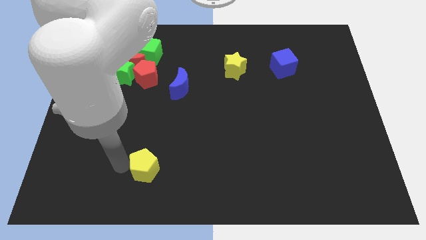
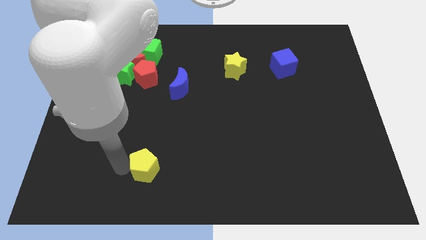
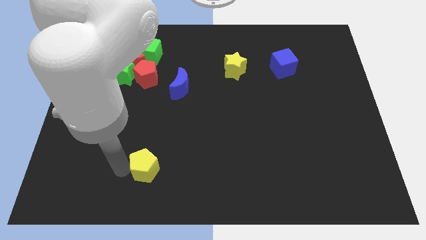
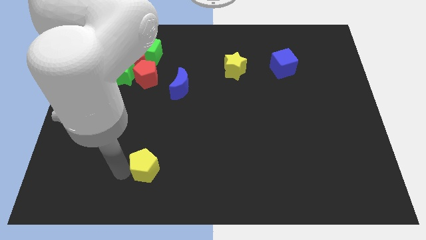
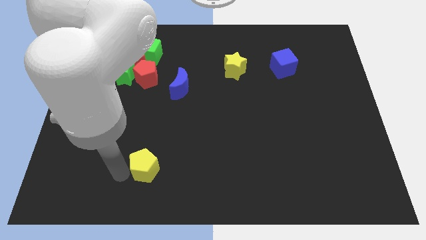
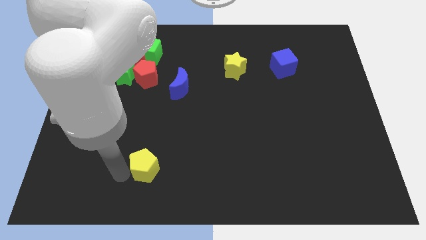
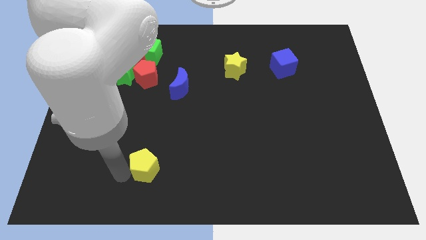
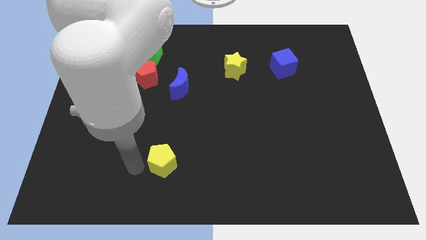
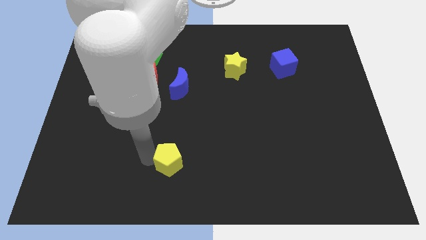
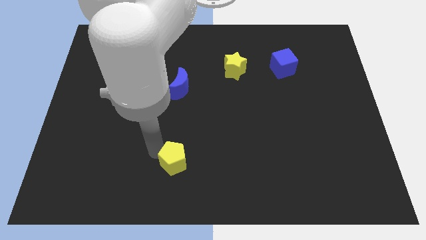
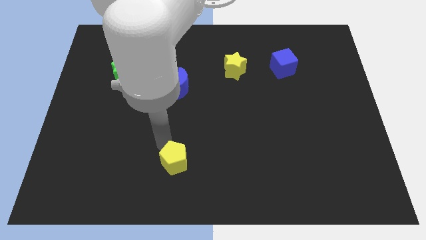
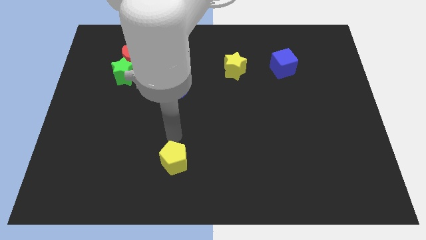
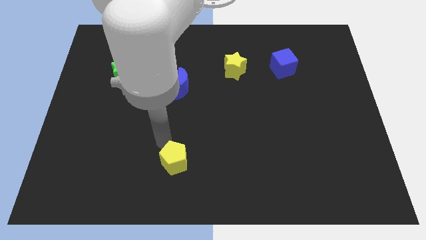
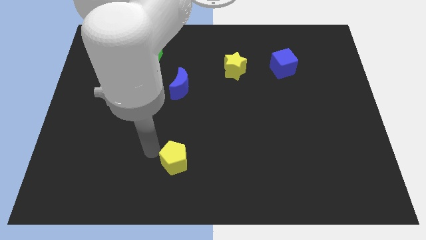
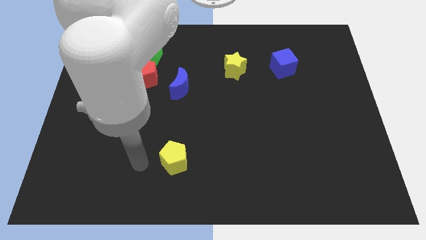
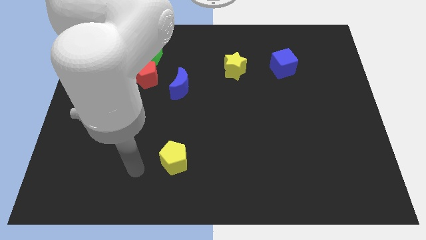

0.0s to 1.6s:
place the yellow pentagon below the blue crescent

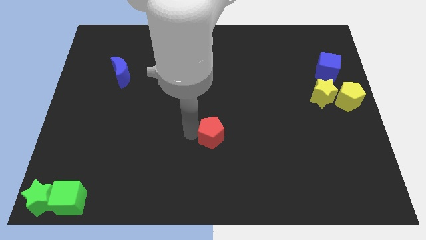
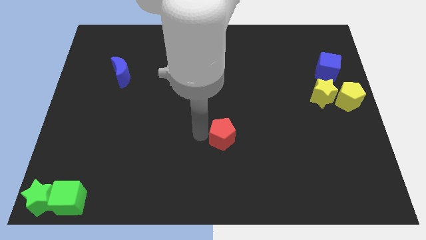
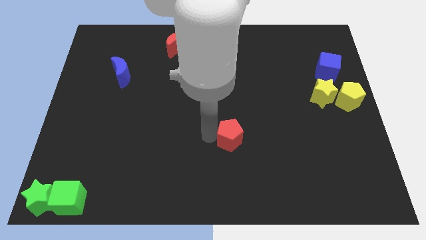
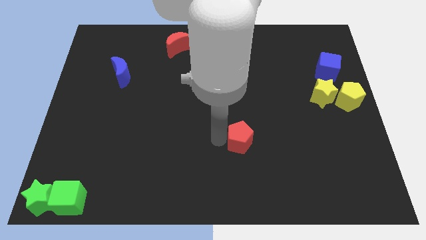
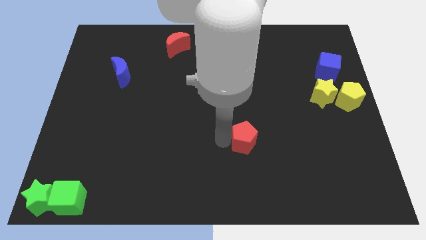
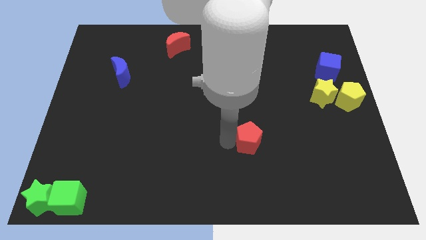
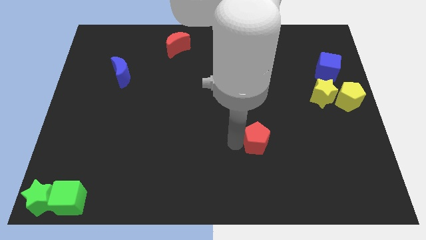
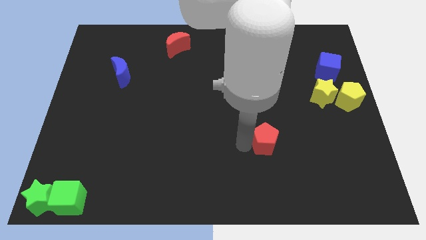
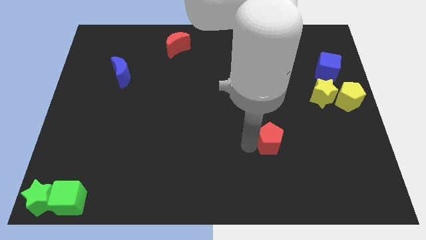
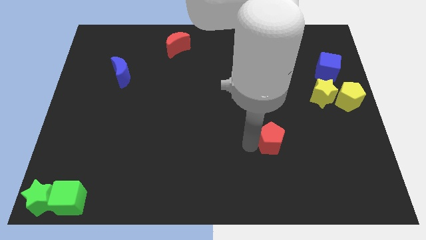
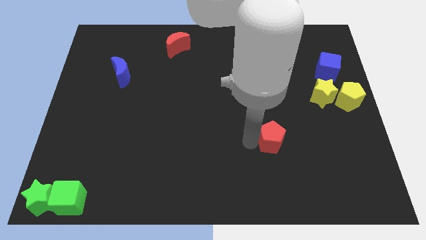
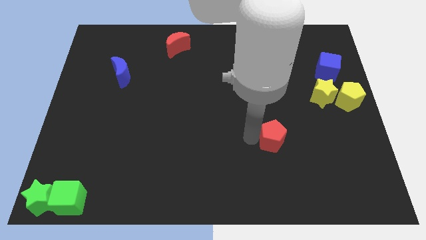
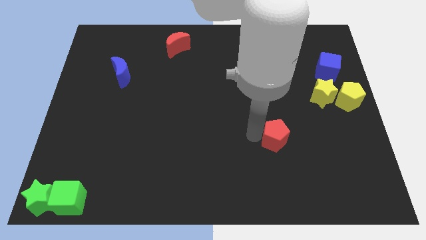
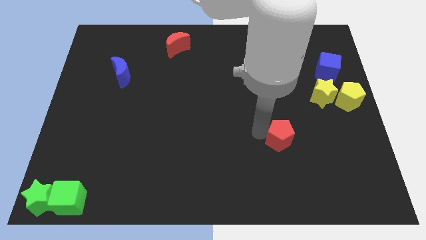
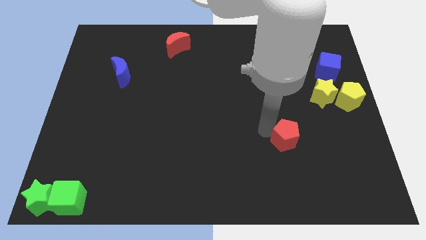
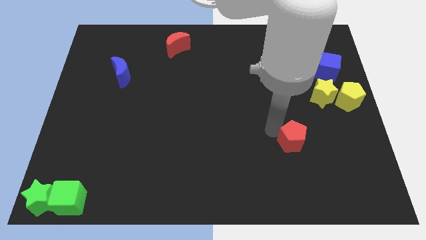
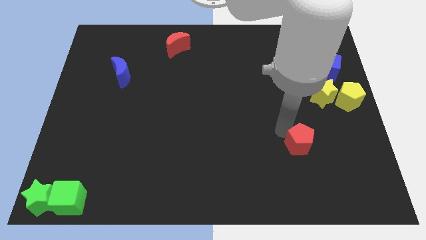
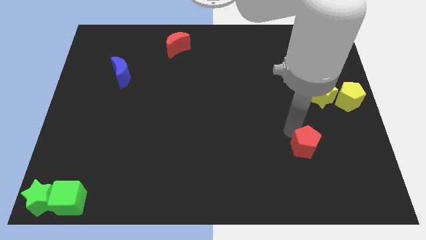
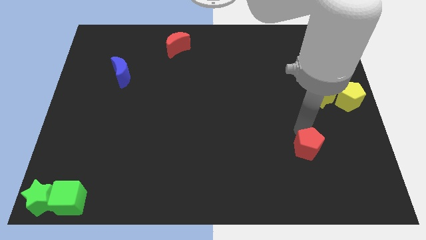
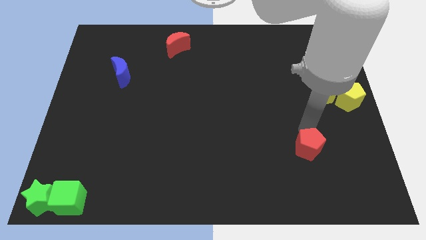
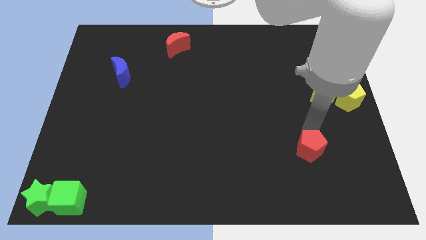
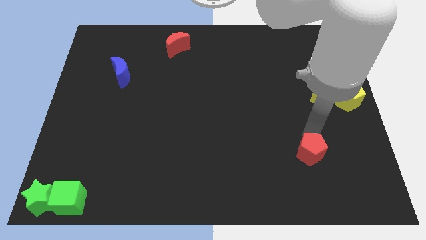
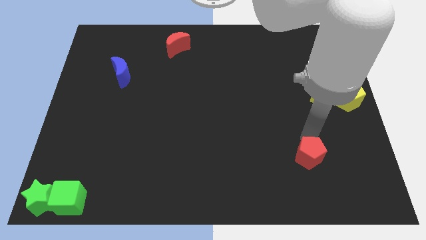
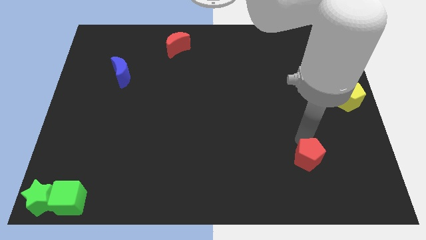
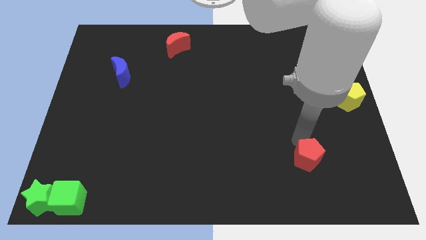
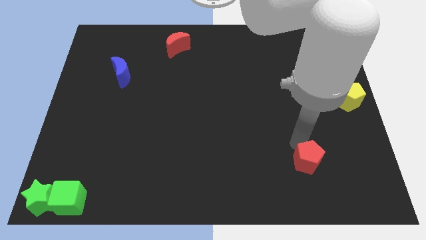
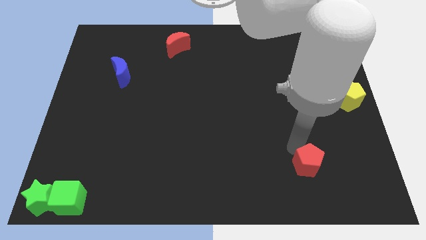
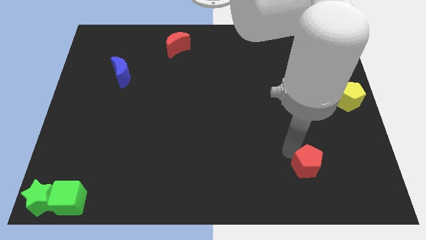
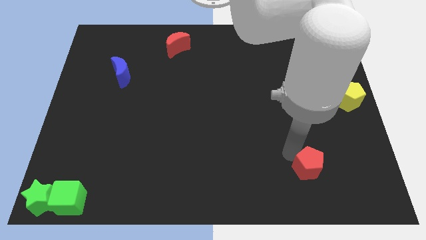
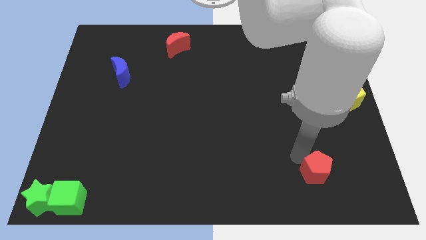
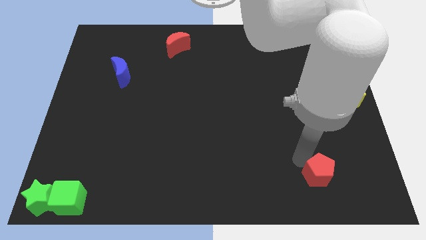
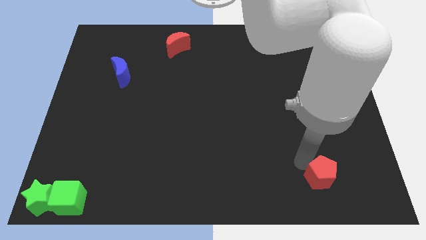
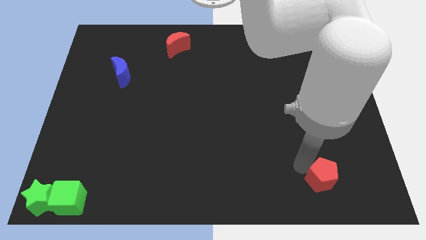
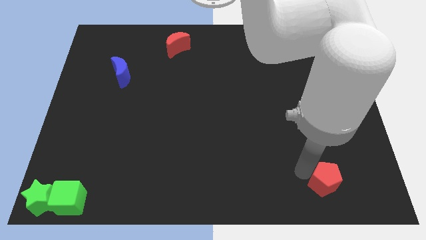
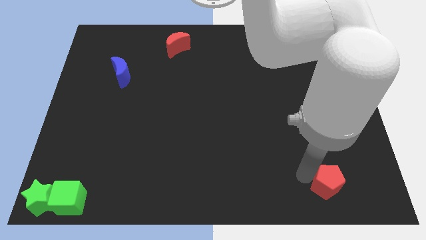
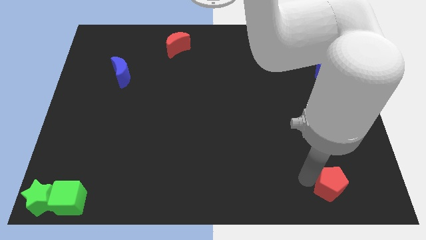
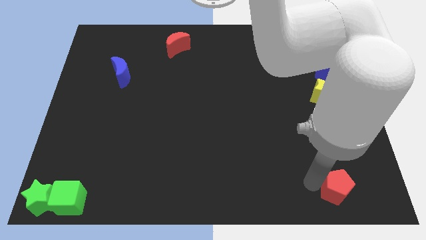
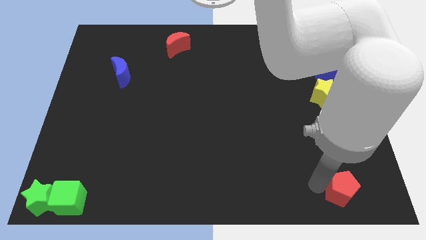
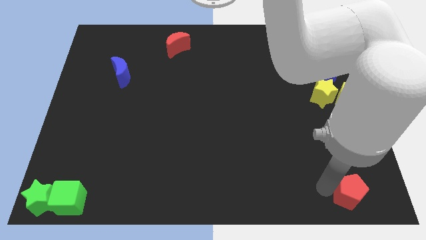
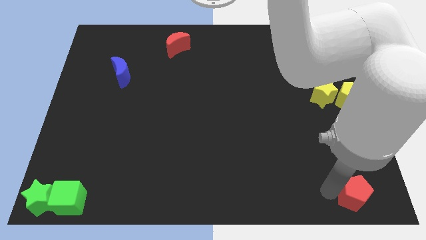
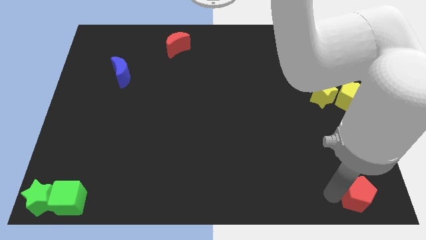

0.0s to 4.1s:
move the red pentagon to the bottom of the yellow pentagon

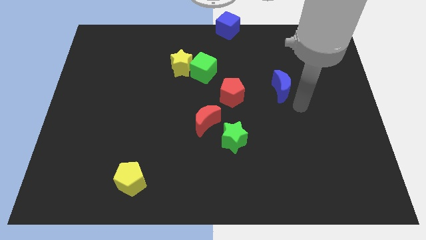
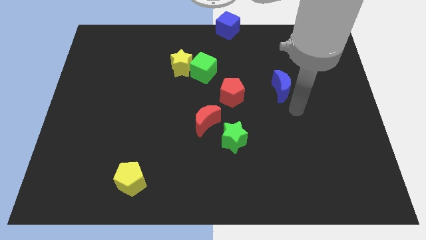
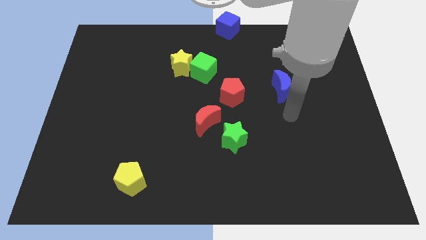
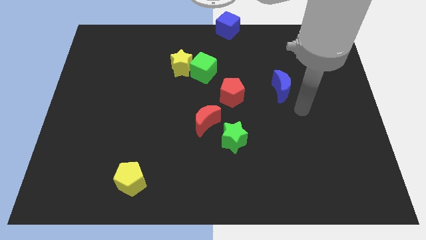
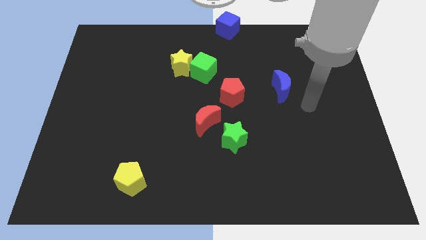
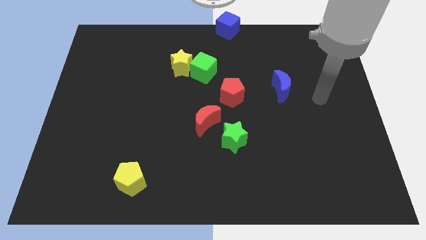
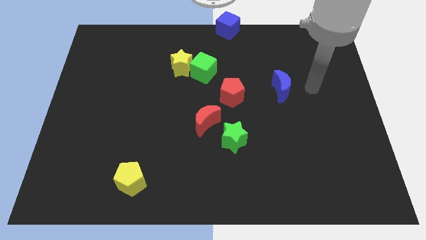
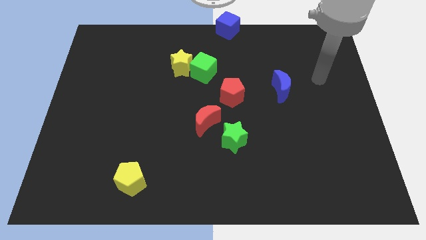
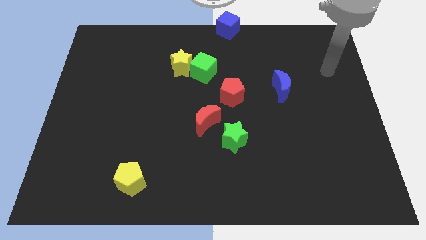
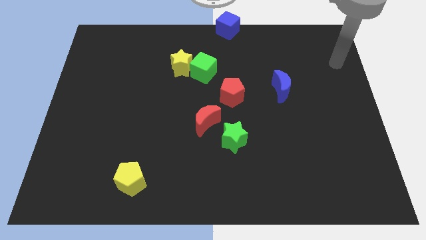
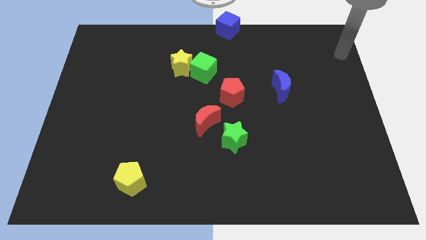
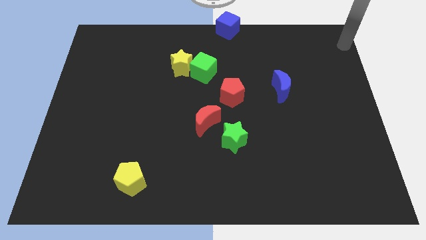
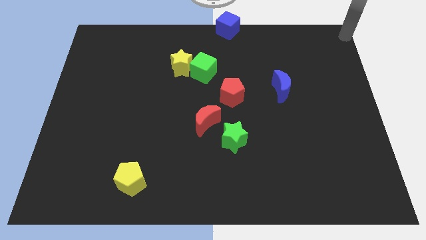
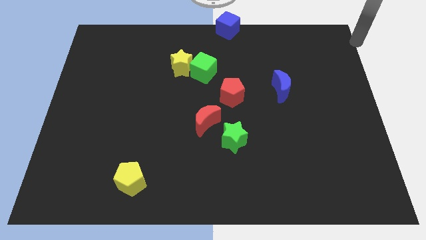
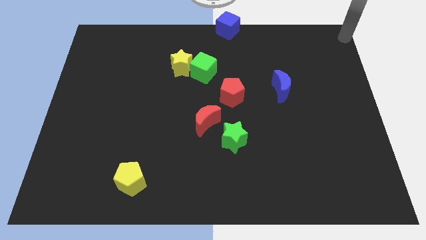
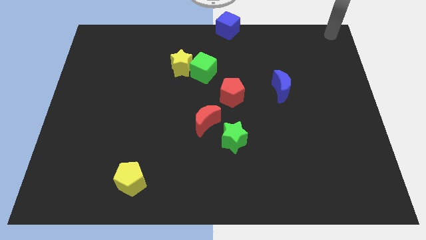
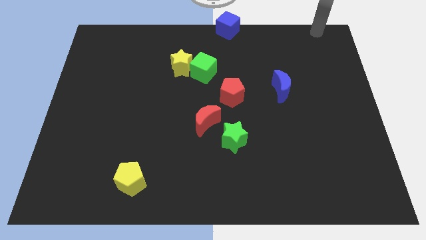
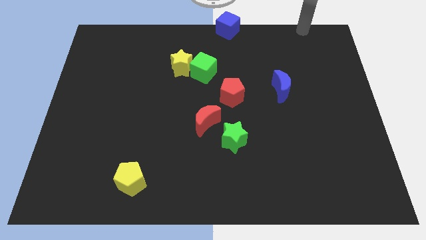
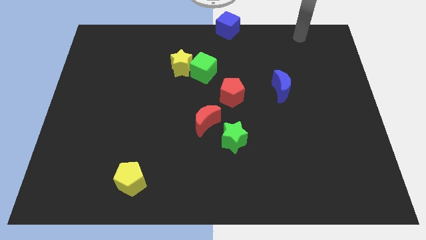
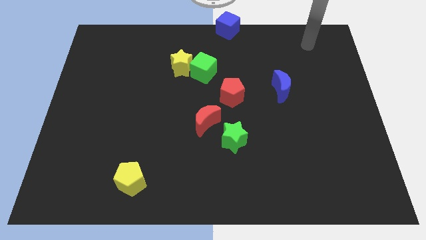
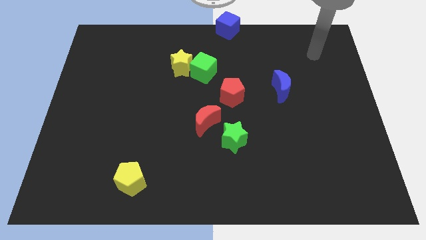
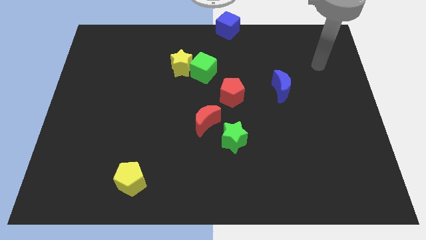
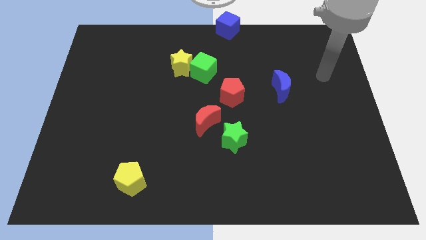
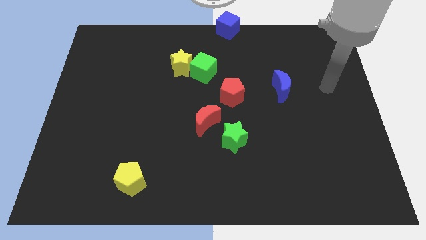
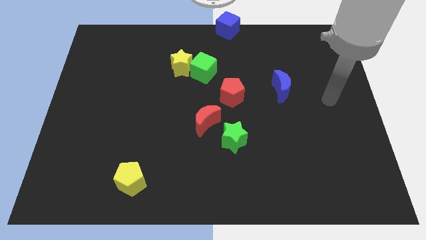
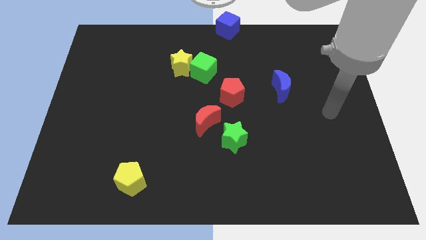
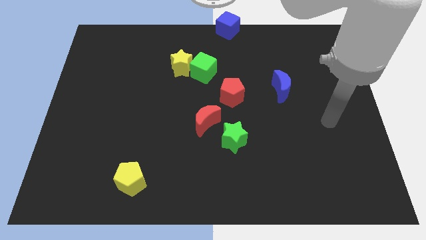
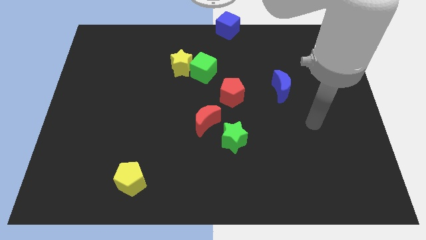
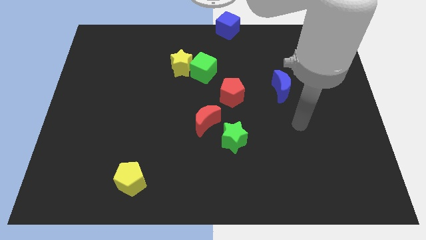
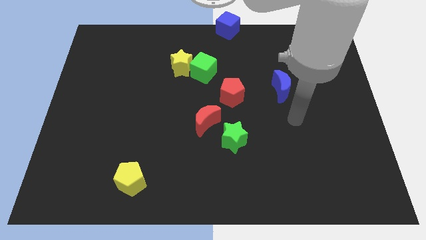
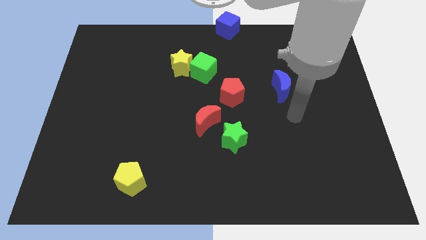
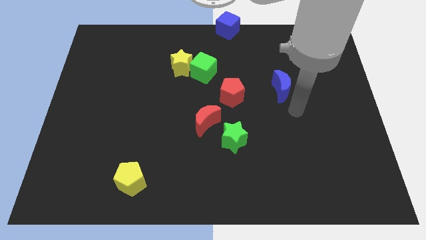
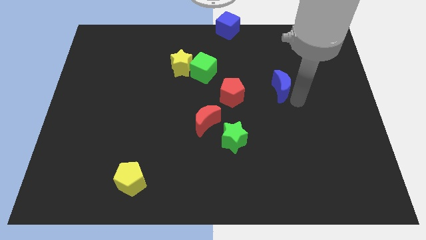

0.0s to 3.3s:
place arm below blue moon
